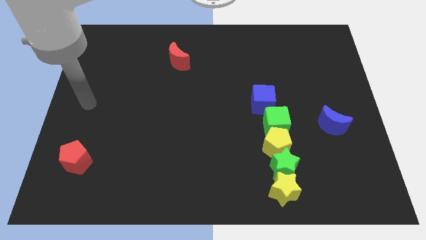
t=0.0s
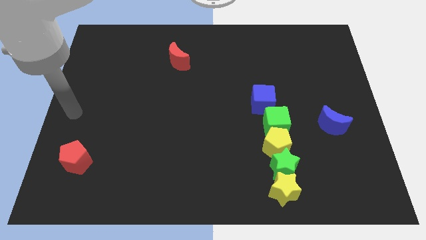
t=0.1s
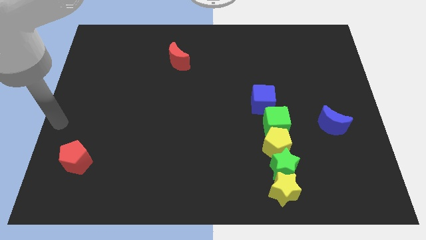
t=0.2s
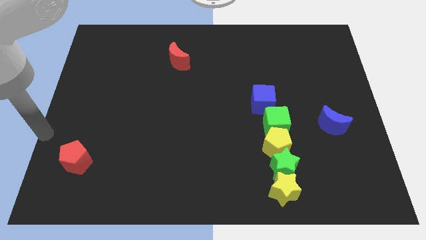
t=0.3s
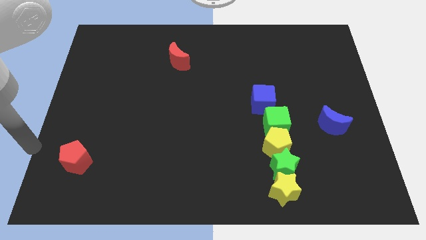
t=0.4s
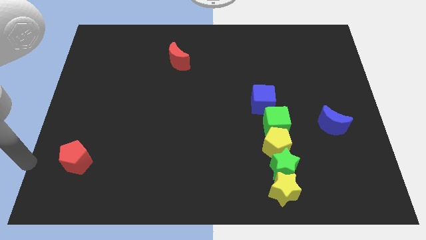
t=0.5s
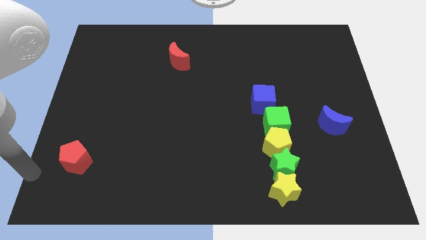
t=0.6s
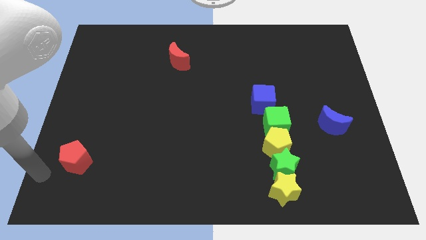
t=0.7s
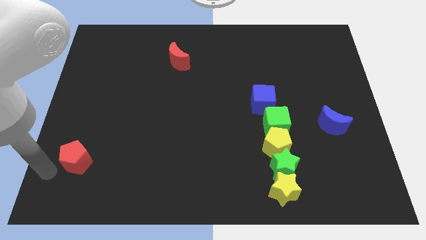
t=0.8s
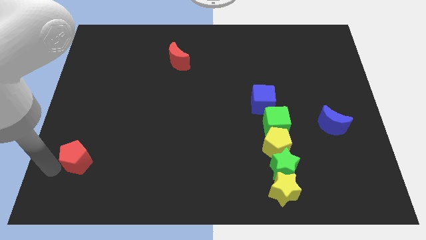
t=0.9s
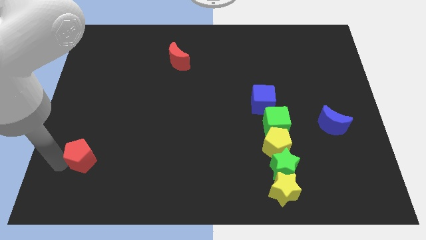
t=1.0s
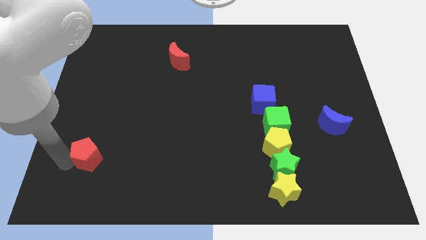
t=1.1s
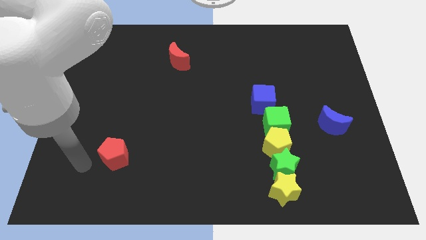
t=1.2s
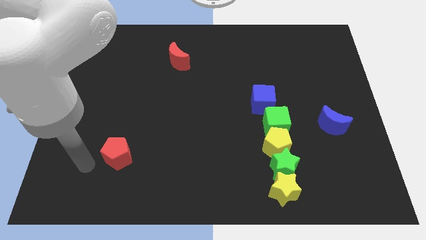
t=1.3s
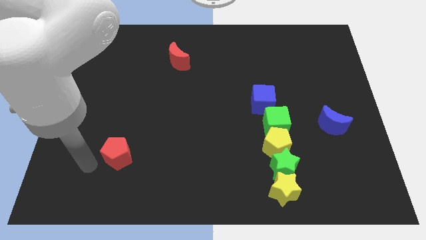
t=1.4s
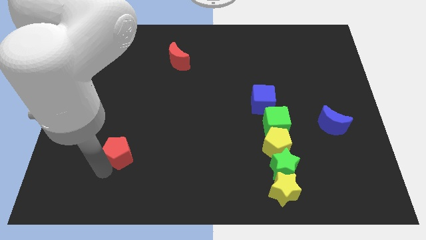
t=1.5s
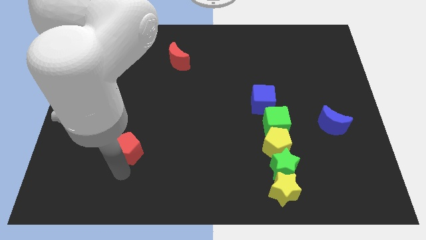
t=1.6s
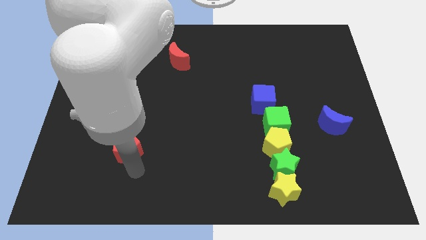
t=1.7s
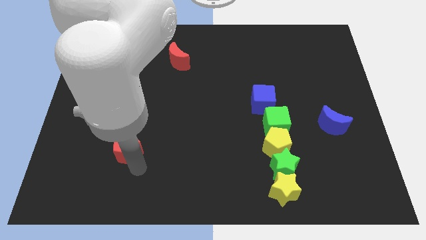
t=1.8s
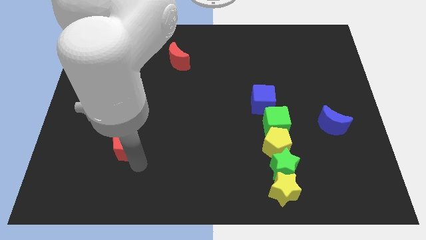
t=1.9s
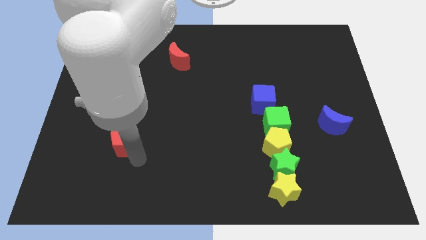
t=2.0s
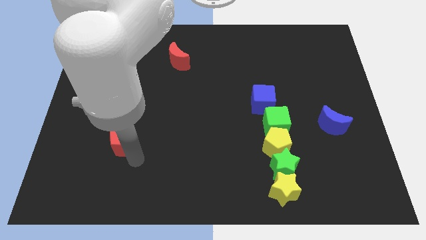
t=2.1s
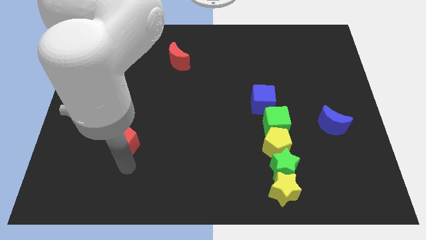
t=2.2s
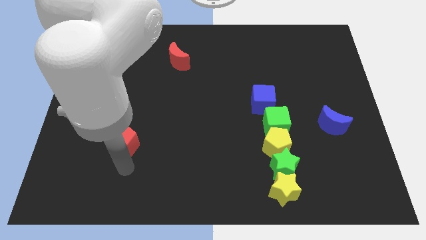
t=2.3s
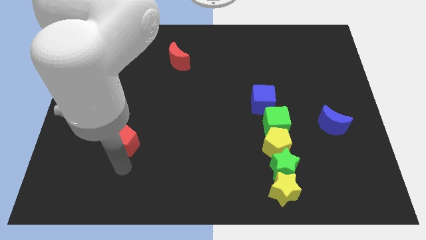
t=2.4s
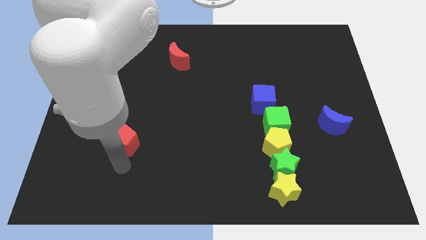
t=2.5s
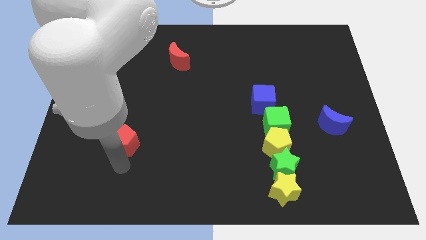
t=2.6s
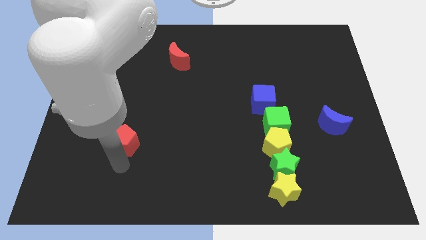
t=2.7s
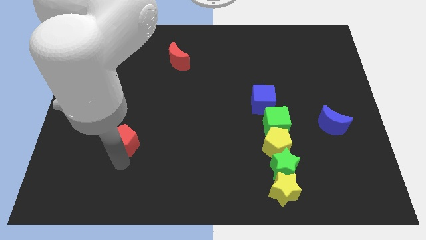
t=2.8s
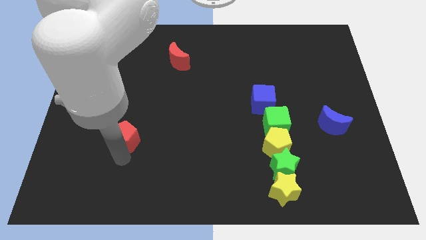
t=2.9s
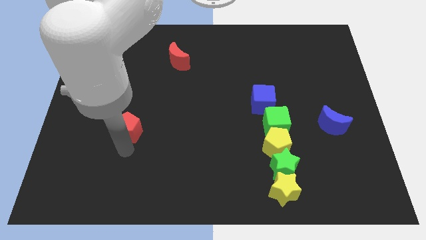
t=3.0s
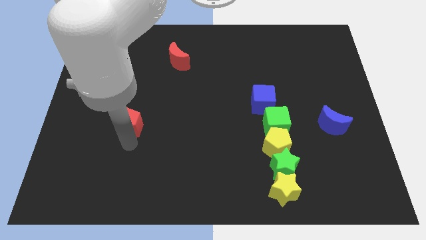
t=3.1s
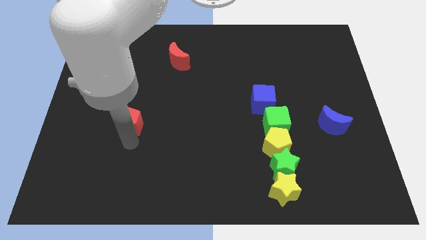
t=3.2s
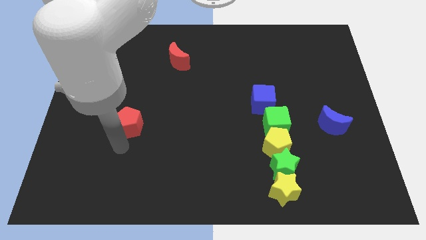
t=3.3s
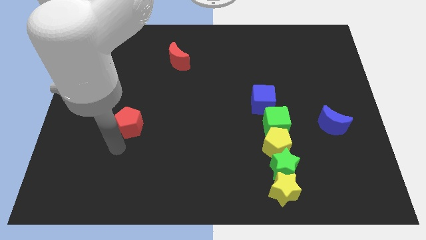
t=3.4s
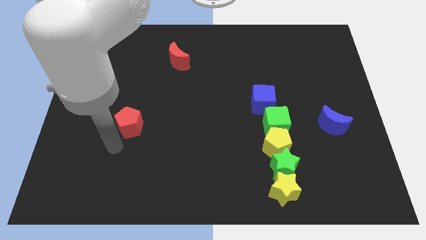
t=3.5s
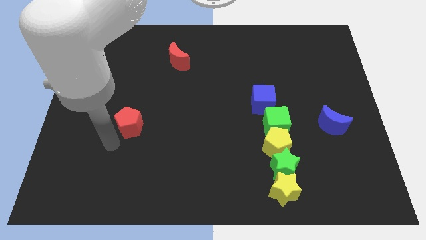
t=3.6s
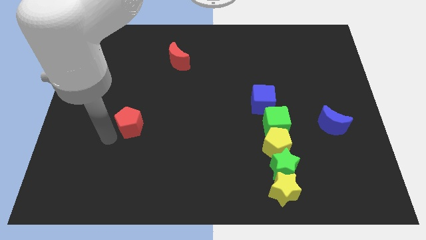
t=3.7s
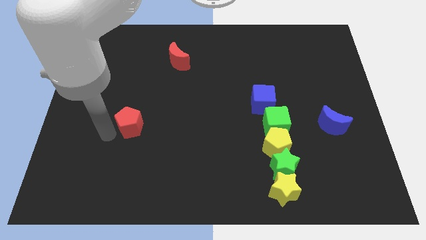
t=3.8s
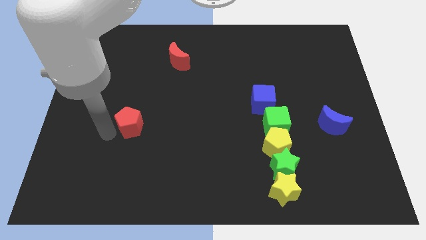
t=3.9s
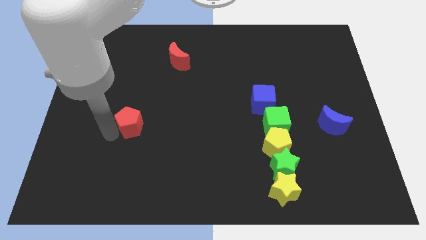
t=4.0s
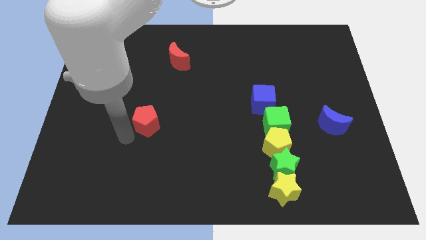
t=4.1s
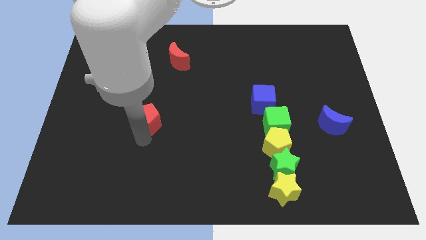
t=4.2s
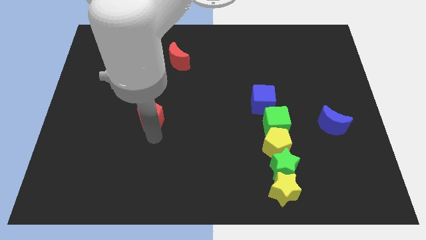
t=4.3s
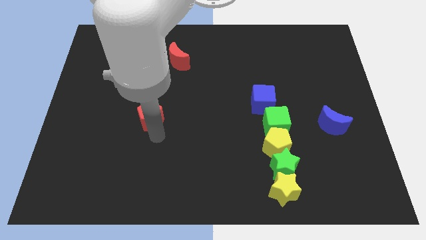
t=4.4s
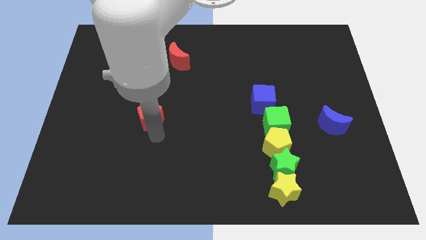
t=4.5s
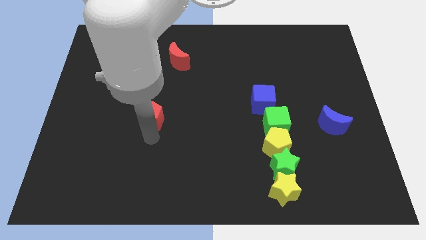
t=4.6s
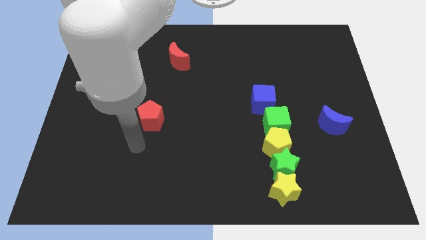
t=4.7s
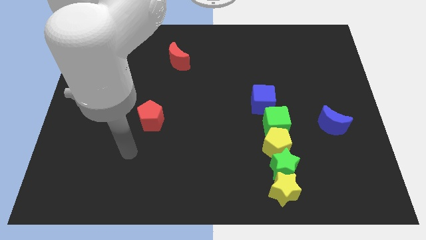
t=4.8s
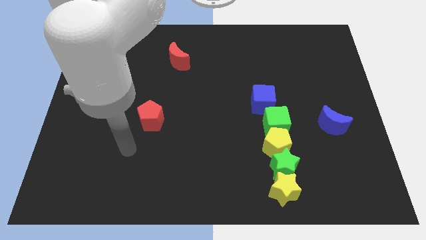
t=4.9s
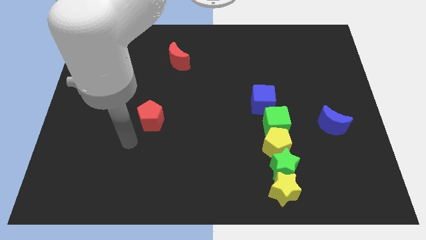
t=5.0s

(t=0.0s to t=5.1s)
place red pentagon horizontal to green cube

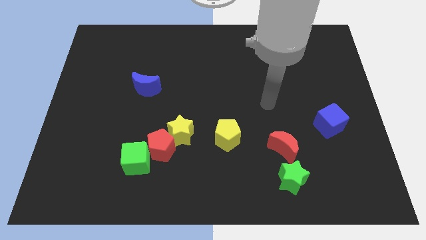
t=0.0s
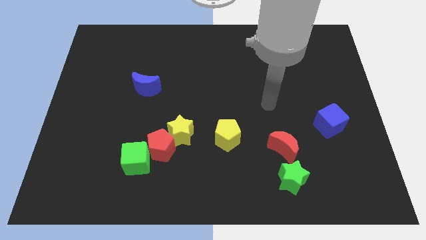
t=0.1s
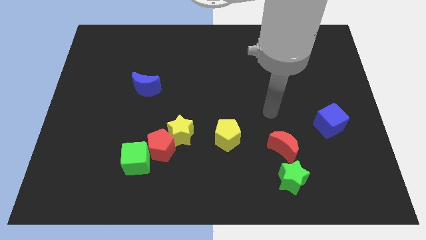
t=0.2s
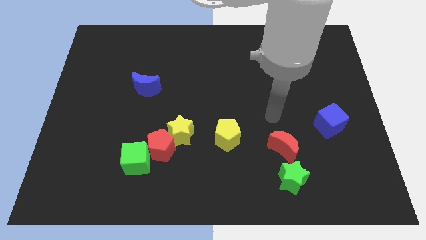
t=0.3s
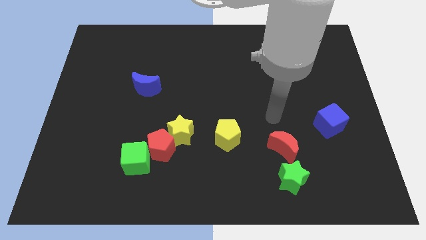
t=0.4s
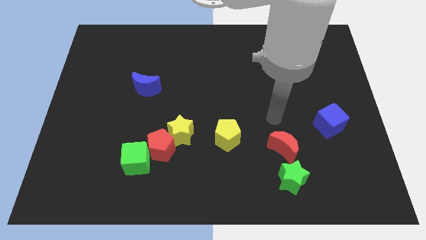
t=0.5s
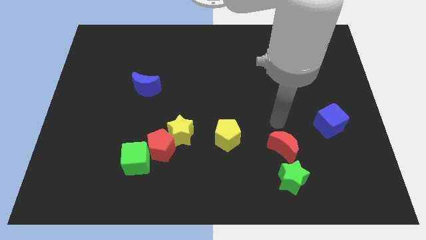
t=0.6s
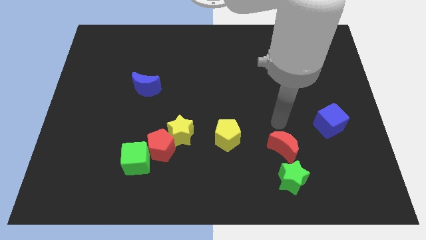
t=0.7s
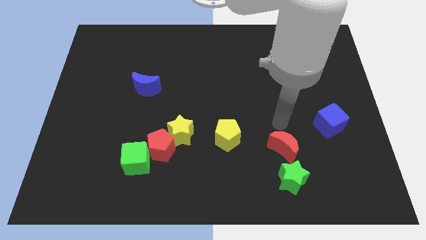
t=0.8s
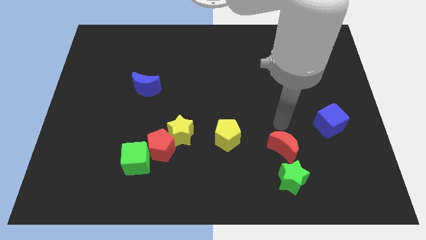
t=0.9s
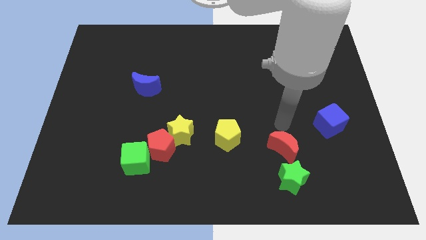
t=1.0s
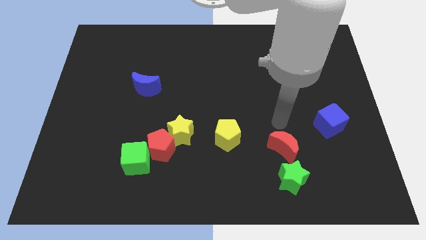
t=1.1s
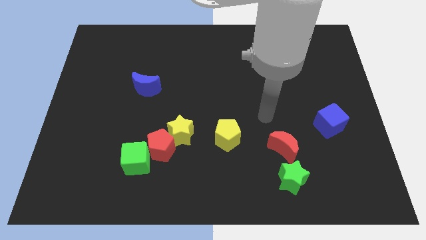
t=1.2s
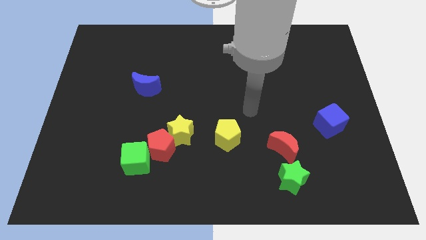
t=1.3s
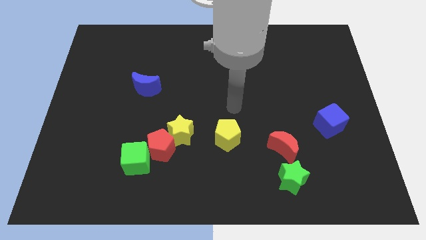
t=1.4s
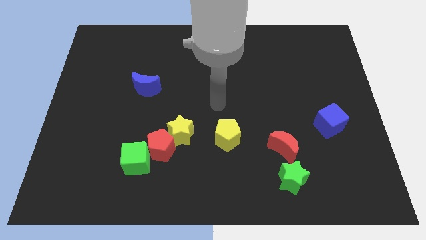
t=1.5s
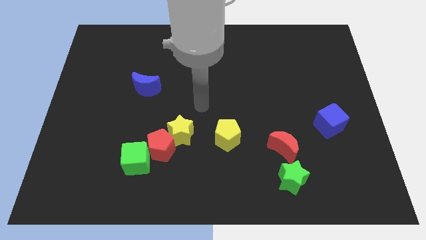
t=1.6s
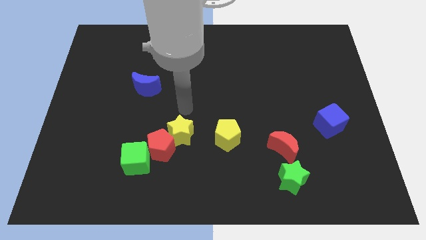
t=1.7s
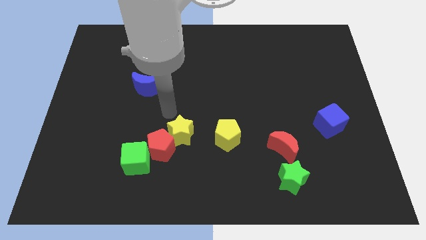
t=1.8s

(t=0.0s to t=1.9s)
put your arm vertically above the yellow star

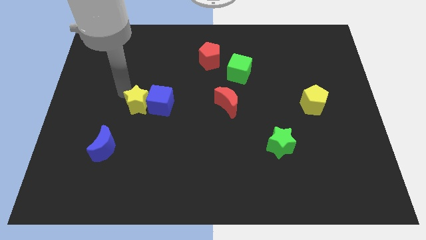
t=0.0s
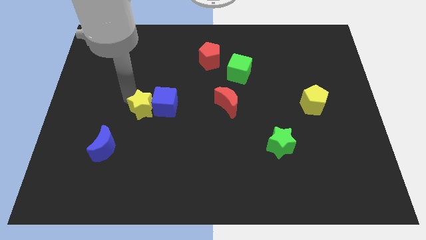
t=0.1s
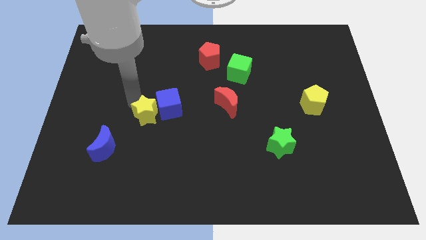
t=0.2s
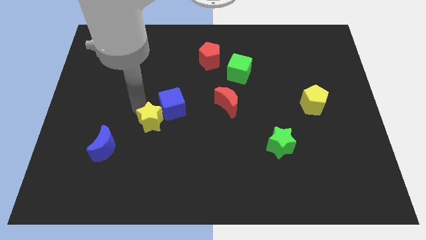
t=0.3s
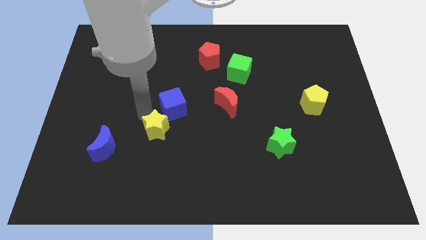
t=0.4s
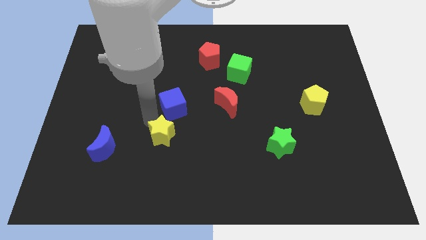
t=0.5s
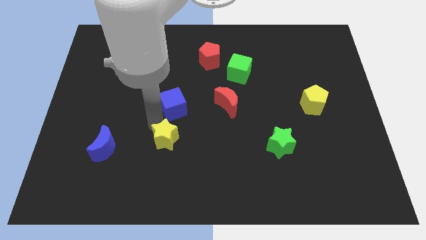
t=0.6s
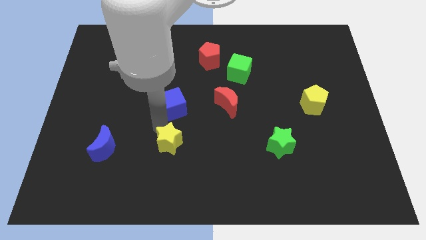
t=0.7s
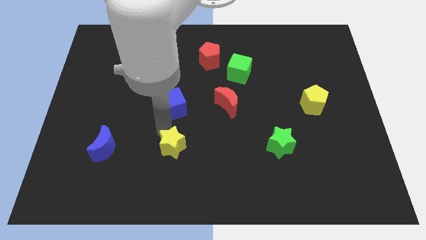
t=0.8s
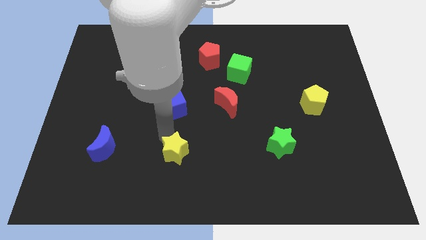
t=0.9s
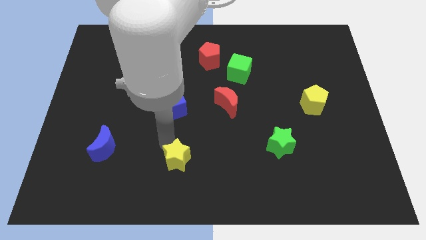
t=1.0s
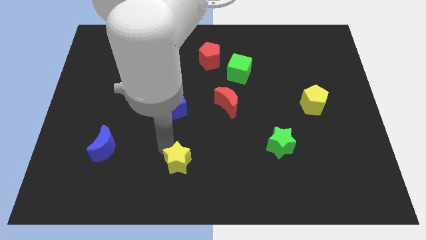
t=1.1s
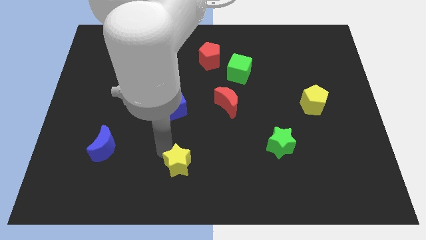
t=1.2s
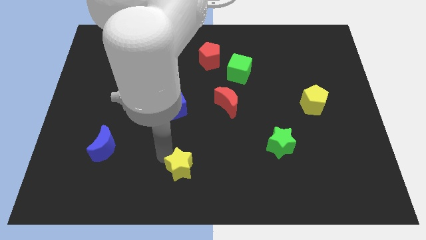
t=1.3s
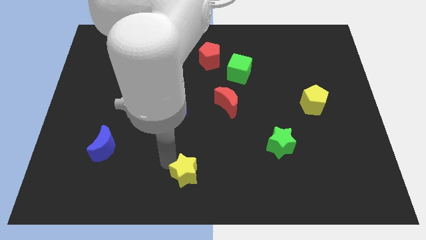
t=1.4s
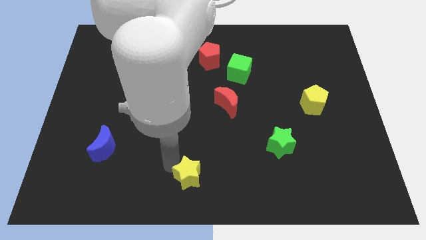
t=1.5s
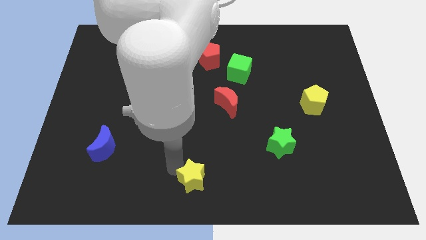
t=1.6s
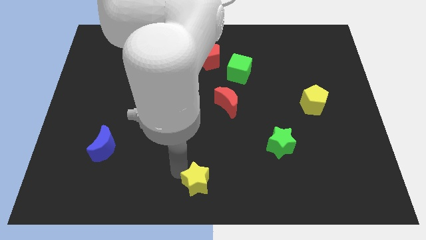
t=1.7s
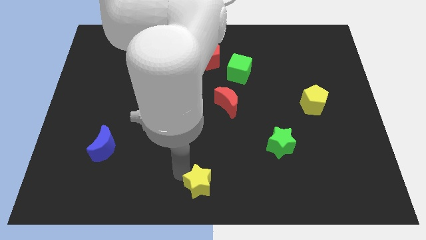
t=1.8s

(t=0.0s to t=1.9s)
push the yellow star towards the bottom center of the board
